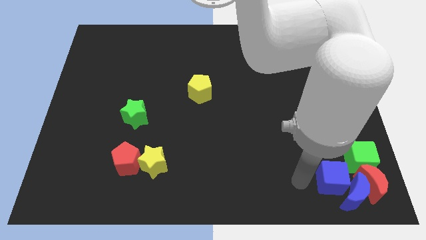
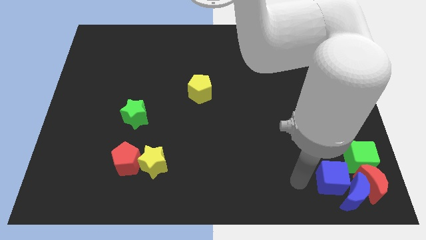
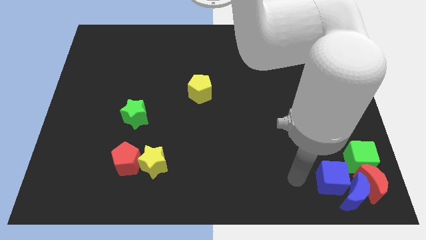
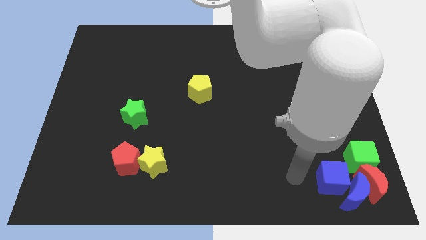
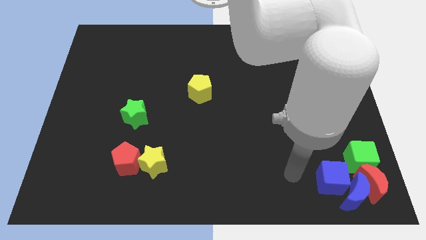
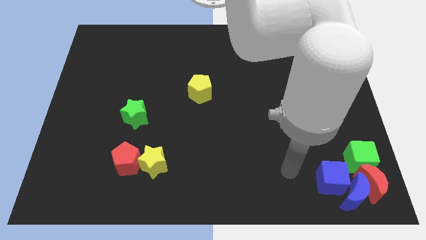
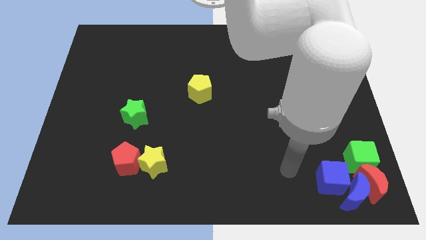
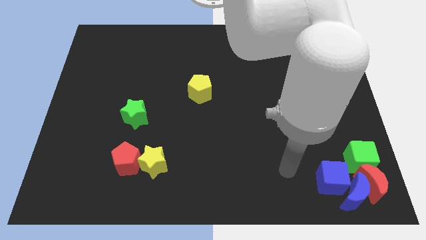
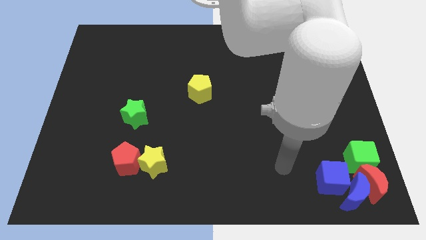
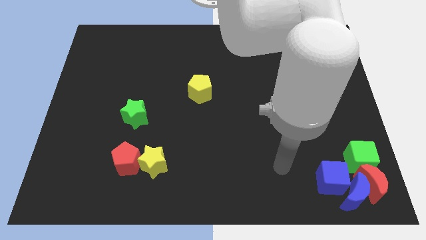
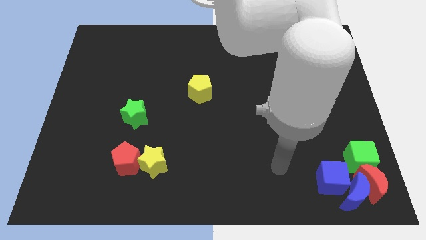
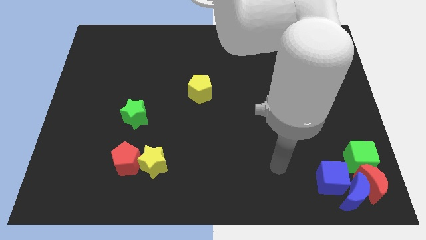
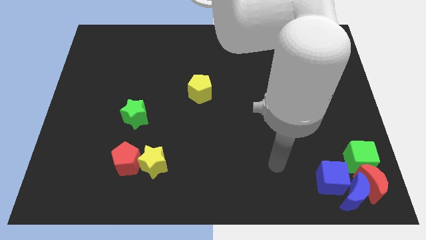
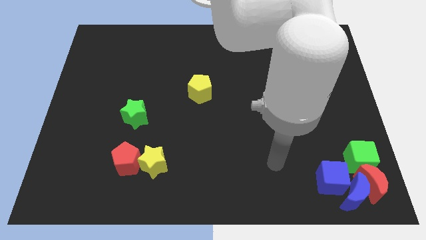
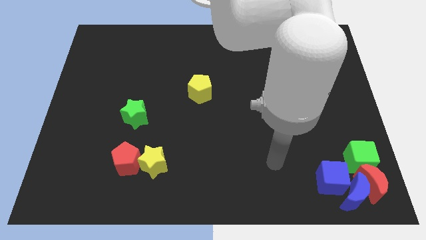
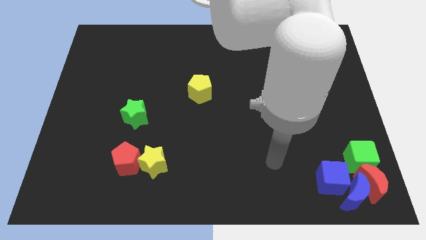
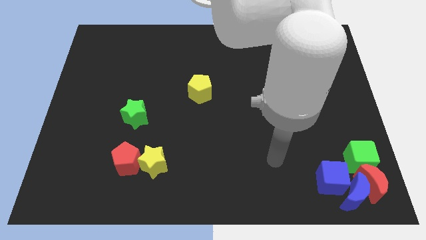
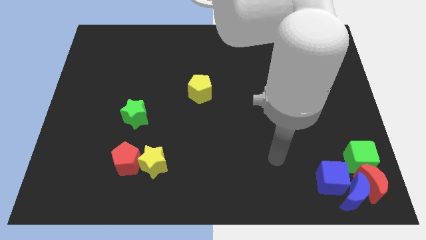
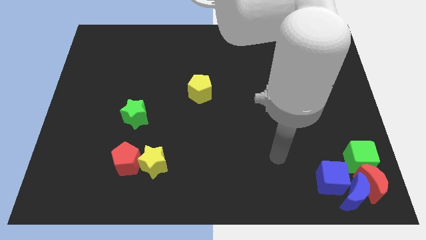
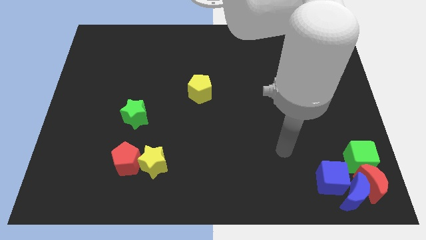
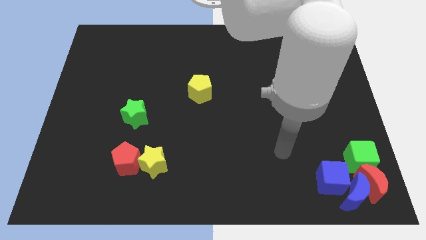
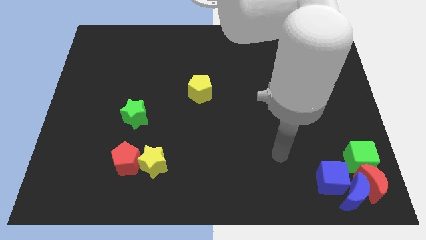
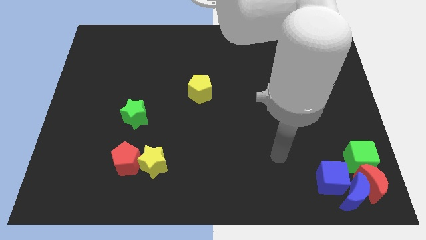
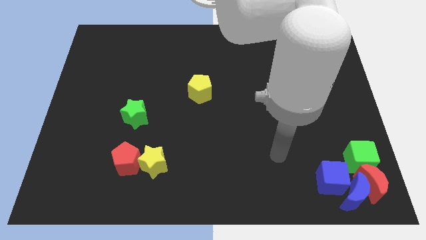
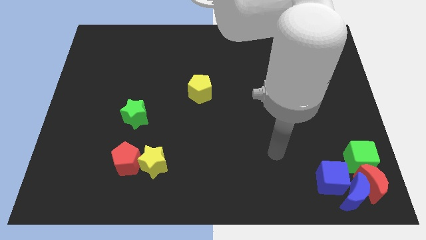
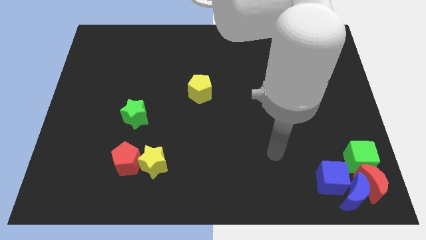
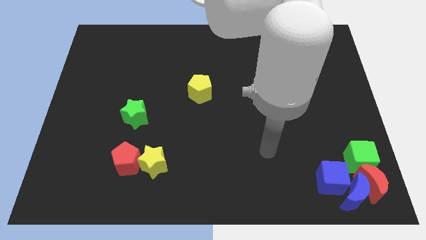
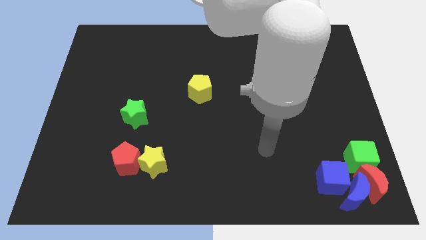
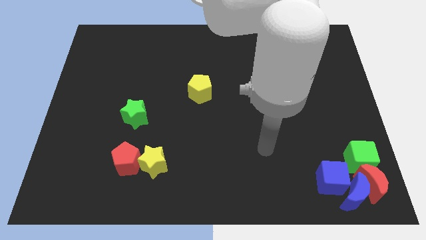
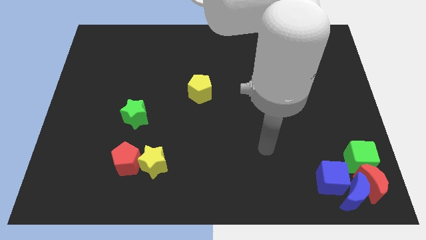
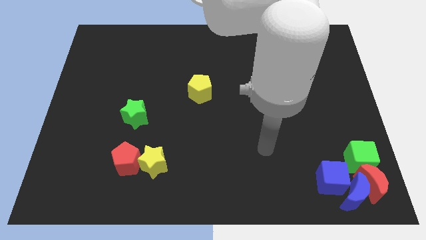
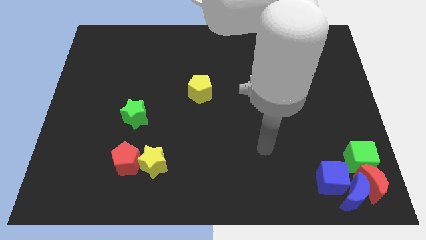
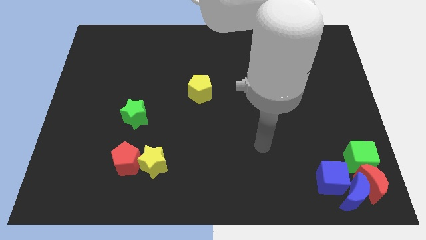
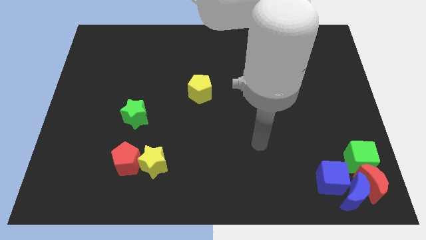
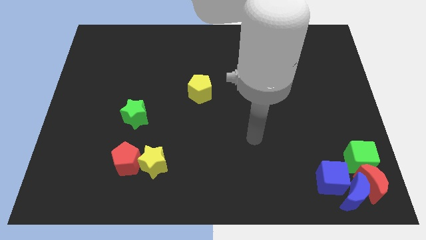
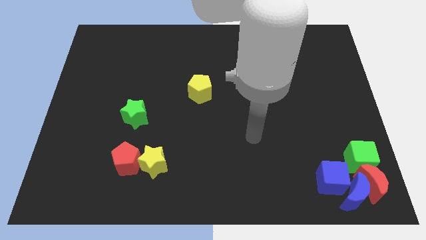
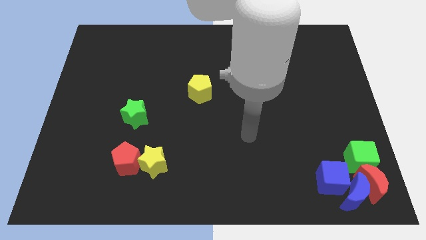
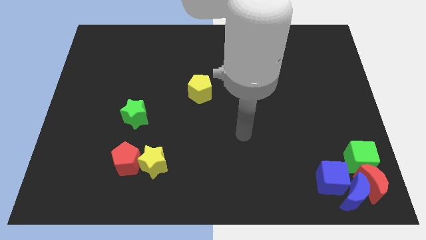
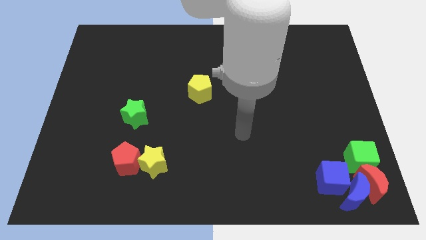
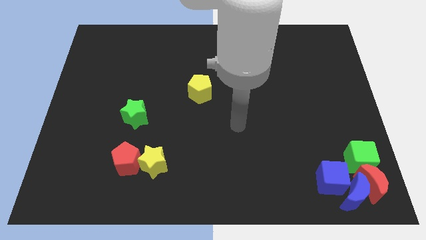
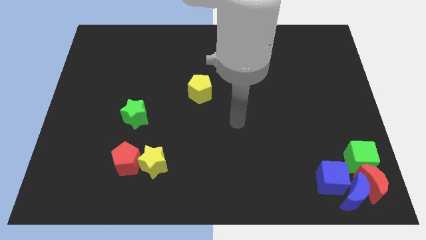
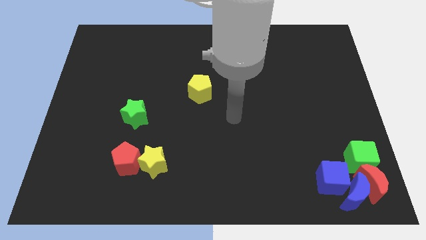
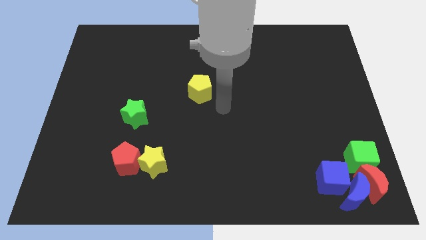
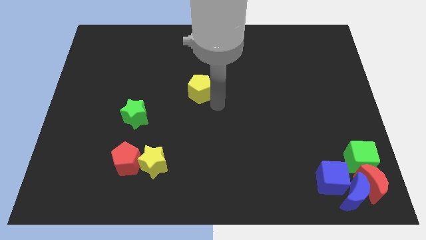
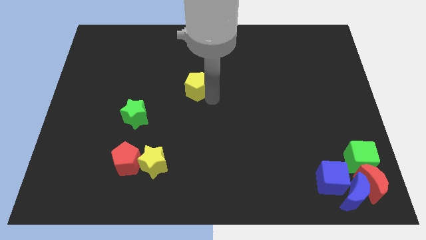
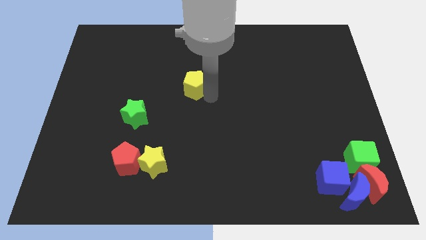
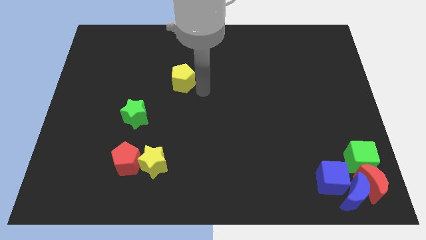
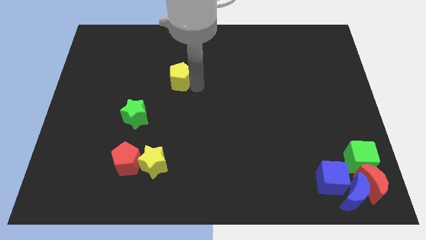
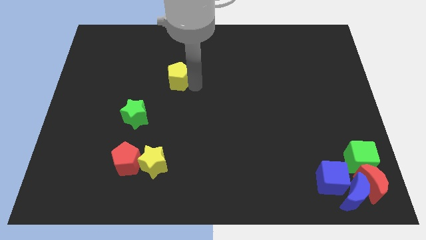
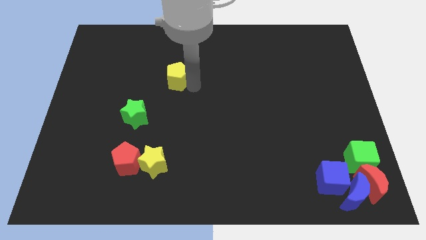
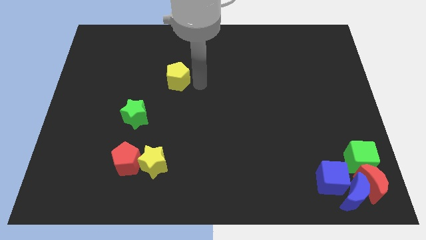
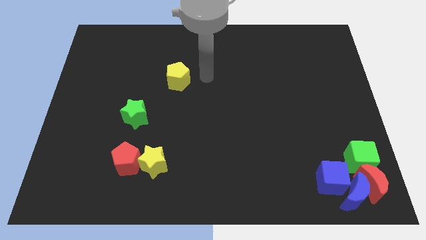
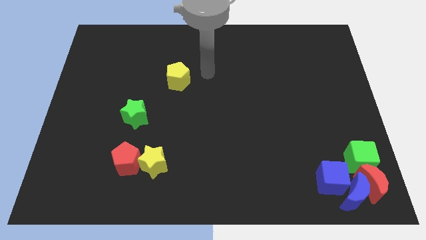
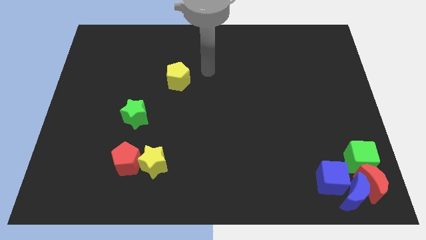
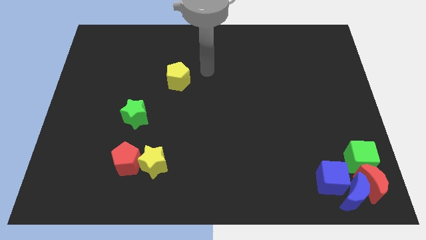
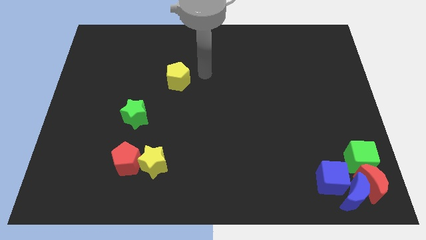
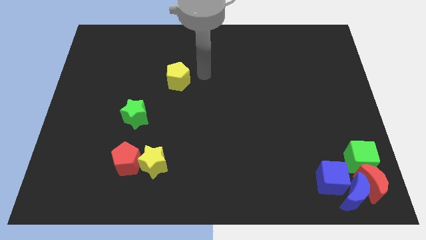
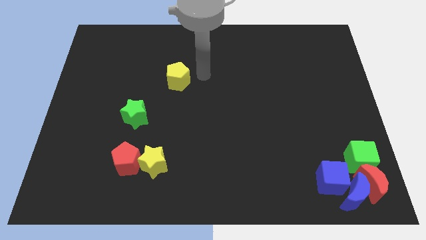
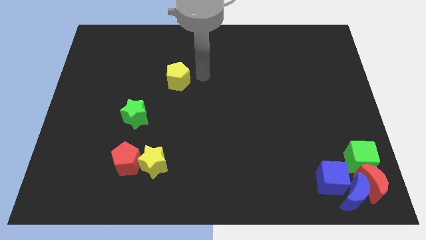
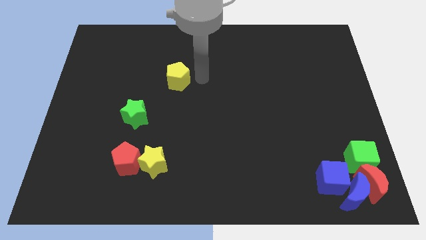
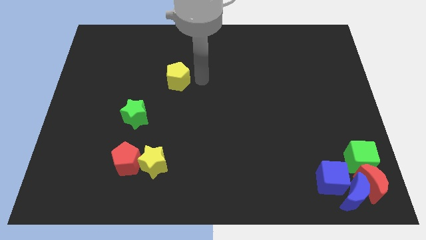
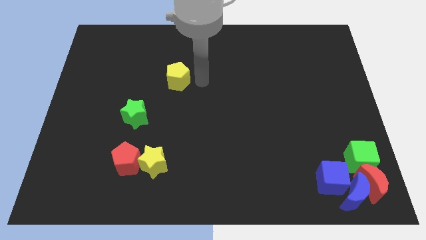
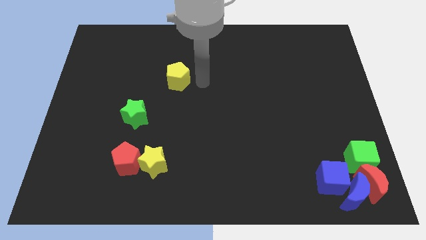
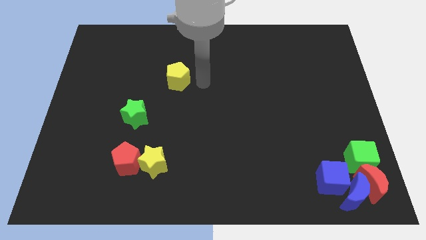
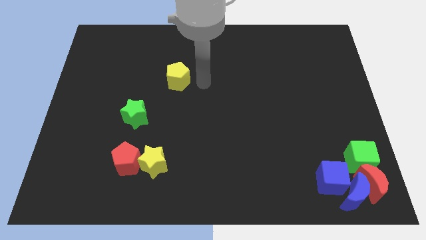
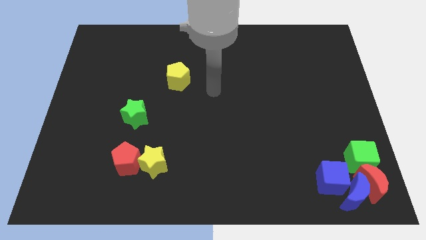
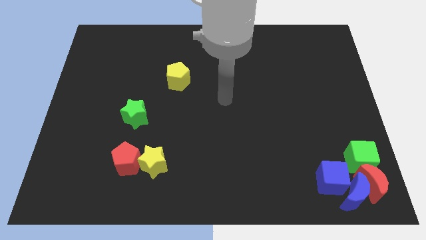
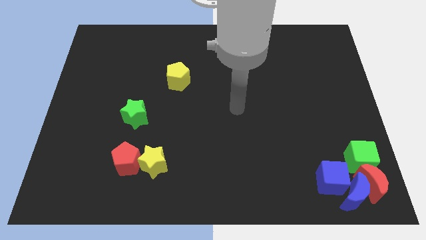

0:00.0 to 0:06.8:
move the yellow pentagon diagonal to the green star

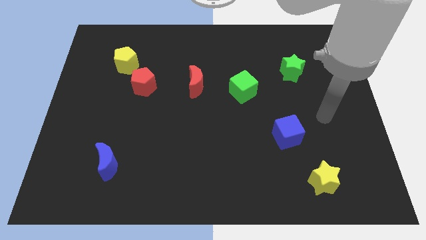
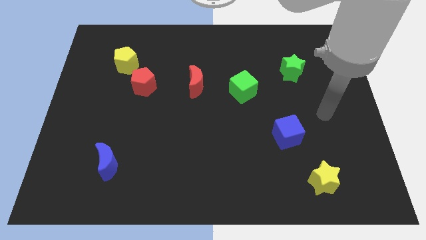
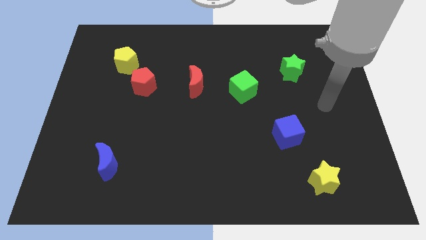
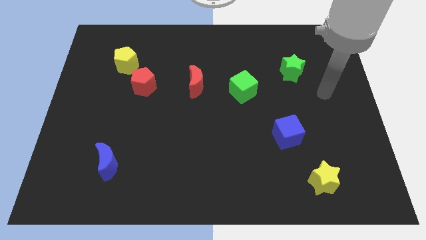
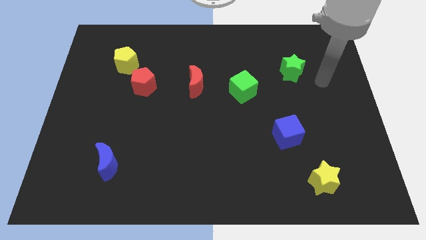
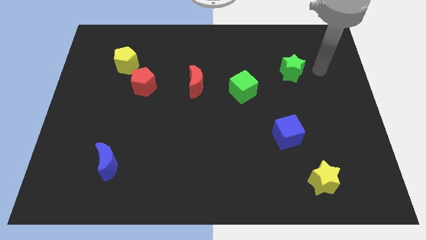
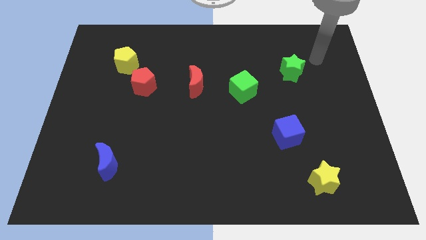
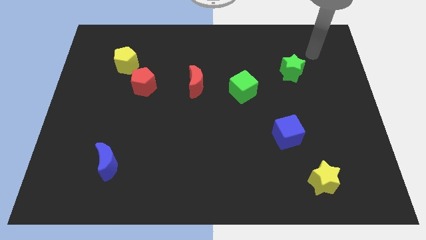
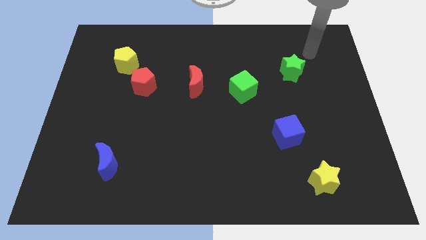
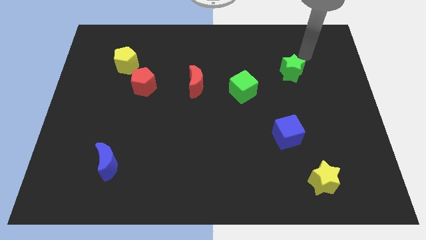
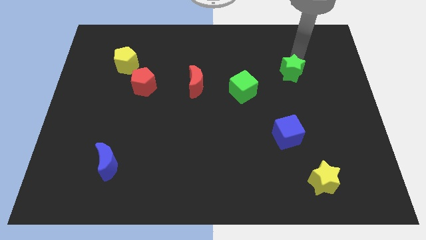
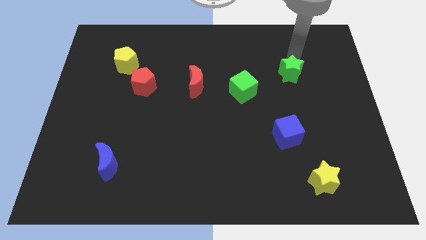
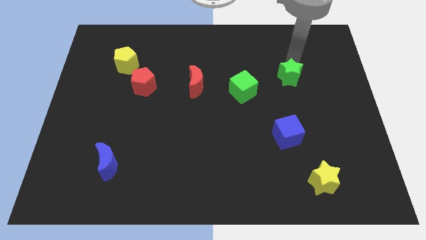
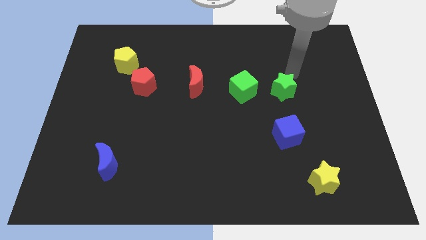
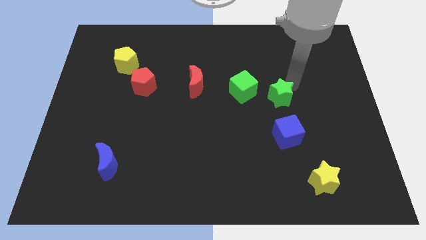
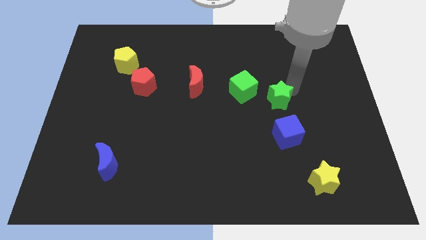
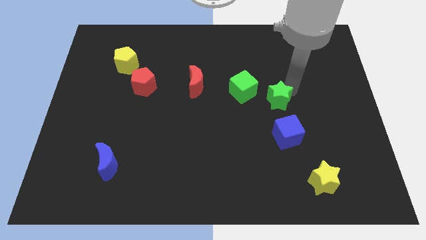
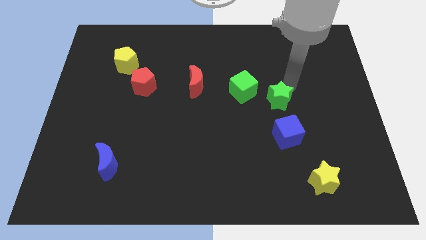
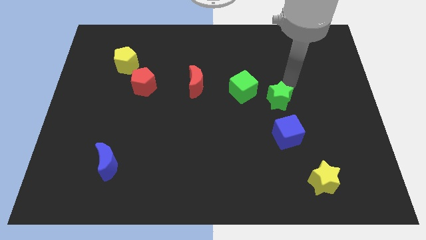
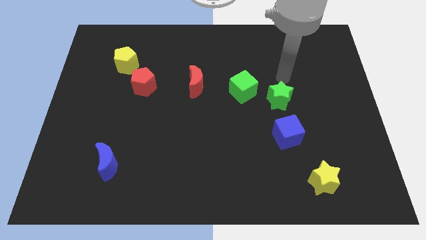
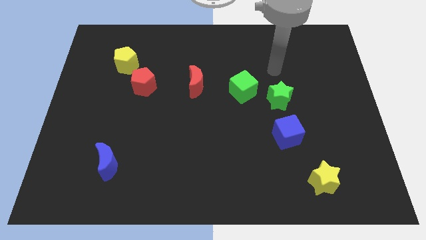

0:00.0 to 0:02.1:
push the green star vertically to the top side of the blue cube

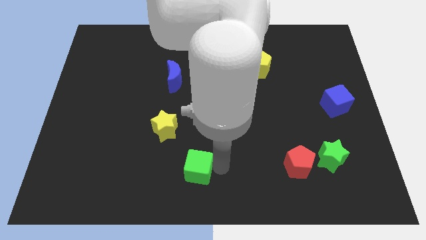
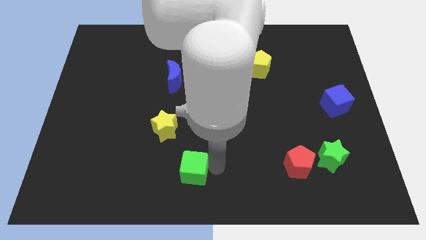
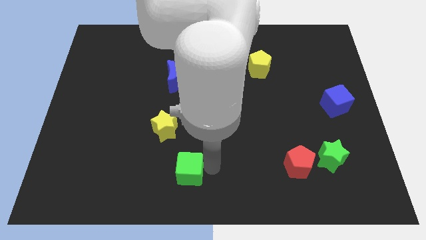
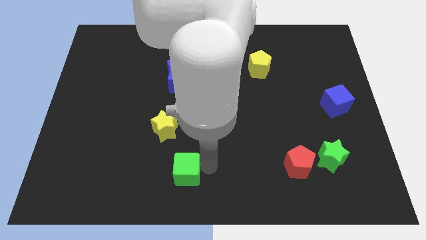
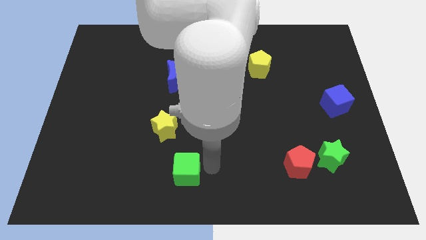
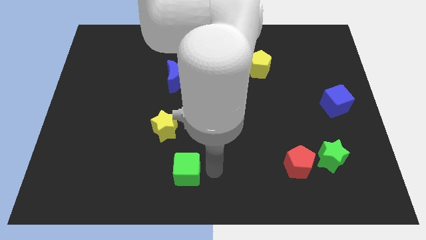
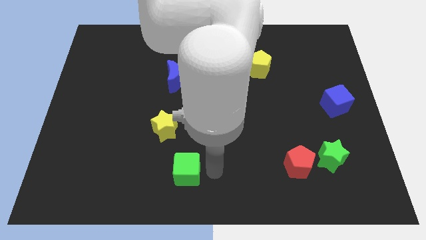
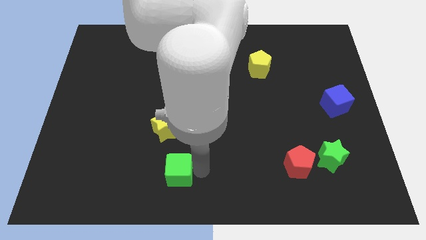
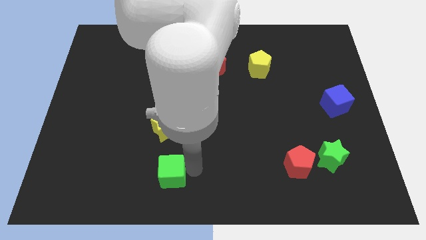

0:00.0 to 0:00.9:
place the green cube vertically below the yellow star
